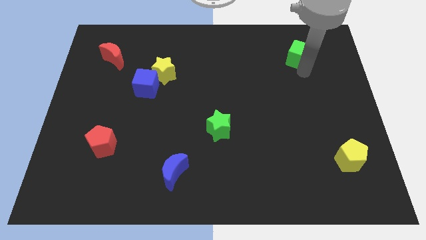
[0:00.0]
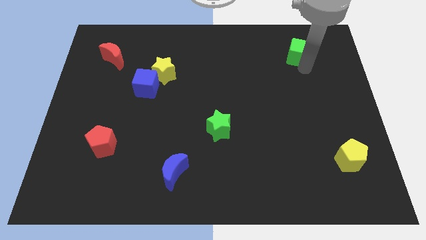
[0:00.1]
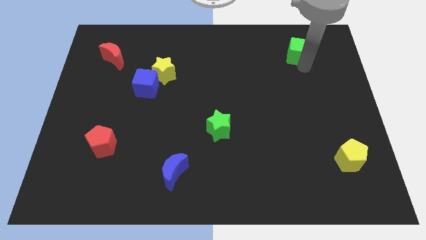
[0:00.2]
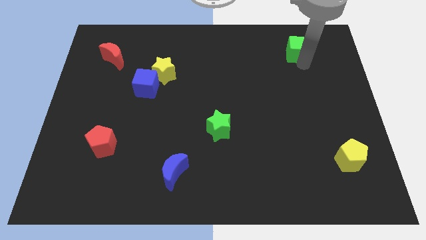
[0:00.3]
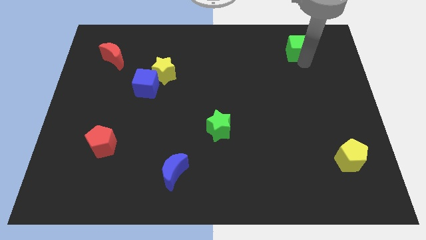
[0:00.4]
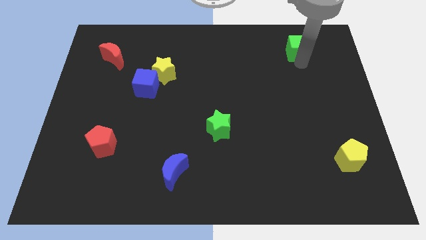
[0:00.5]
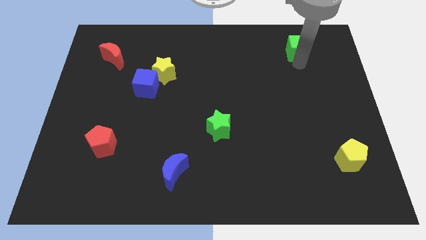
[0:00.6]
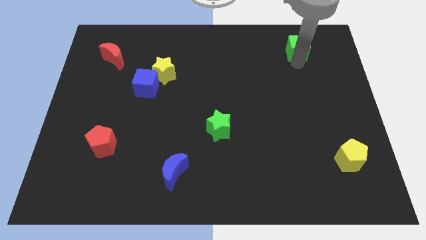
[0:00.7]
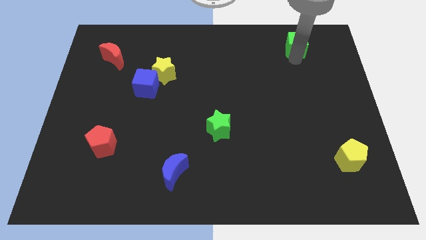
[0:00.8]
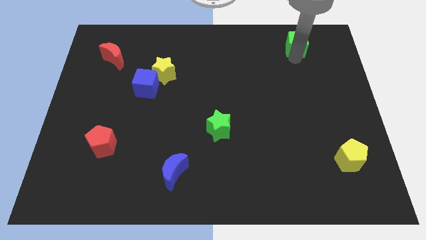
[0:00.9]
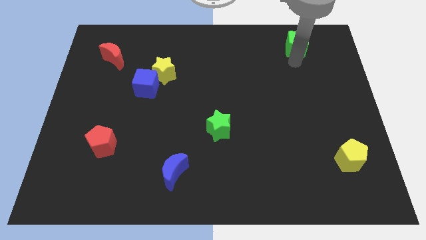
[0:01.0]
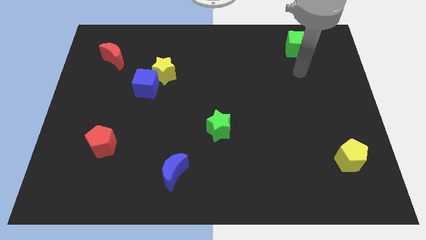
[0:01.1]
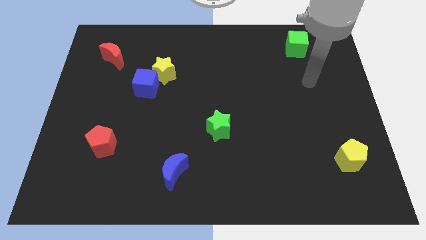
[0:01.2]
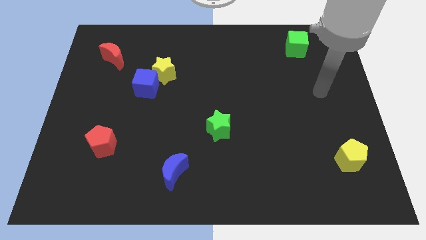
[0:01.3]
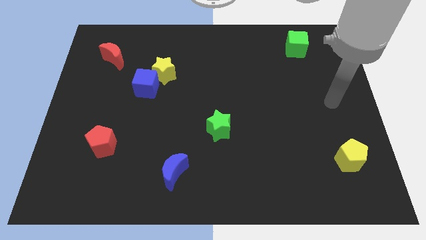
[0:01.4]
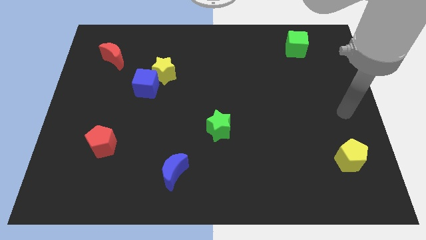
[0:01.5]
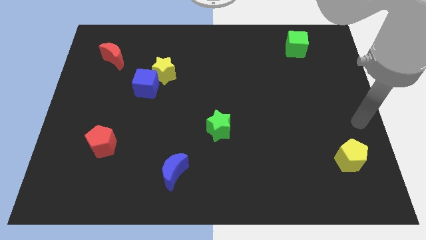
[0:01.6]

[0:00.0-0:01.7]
slightly push the blue cube to the top side

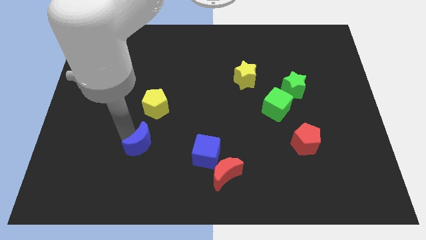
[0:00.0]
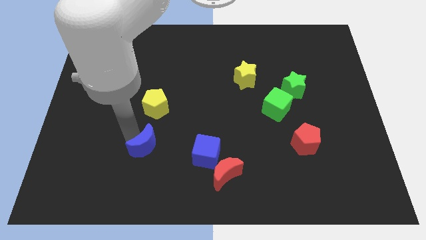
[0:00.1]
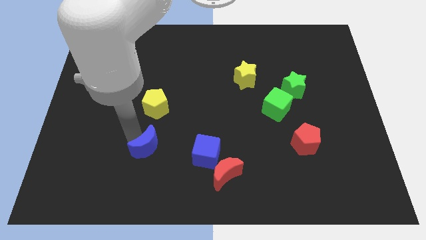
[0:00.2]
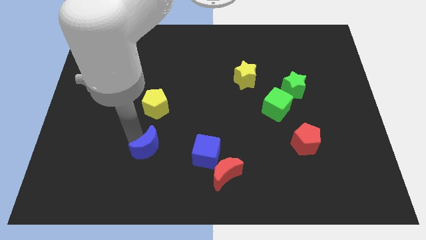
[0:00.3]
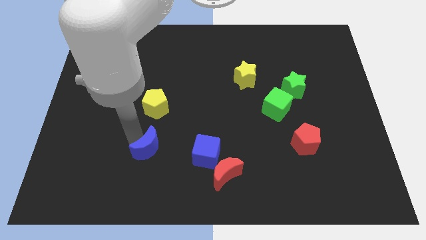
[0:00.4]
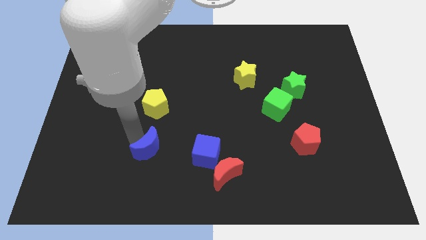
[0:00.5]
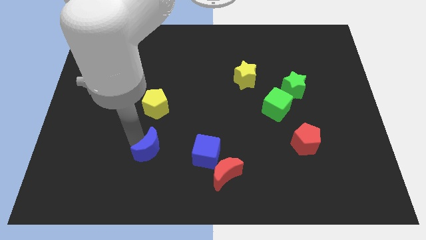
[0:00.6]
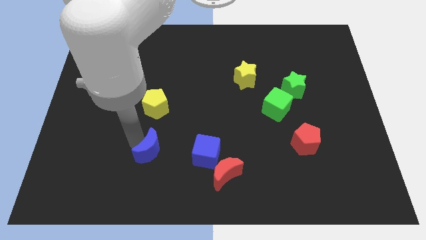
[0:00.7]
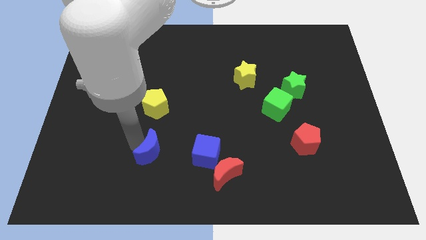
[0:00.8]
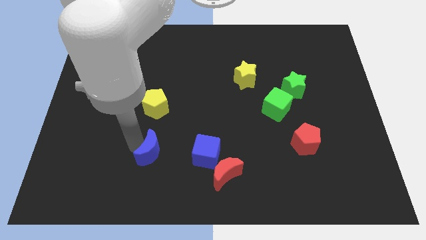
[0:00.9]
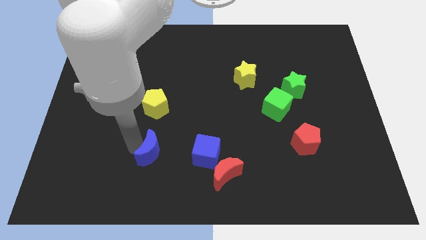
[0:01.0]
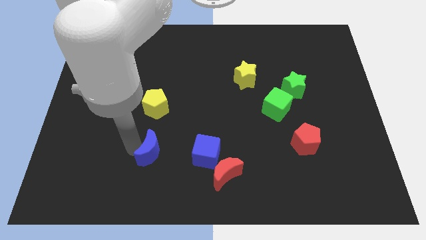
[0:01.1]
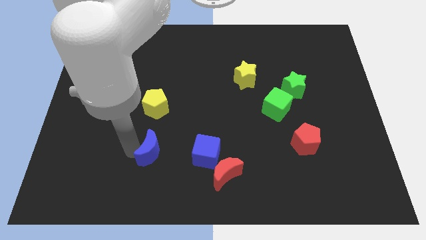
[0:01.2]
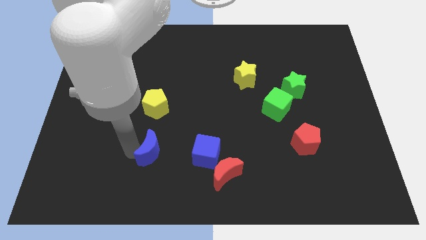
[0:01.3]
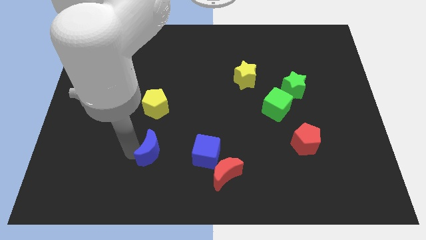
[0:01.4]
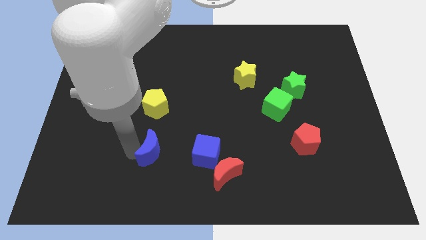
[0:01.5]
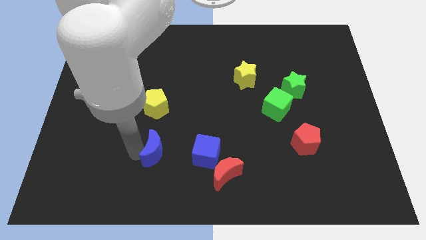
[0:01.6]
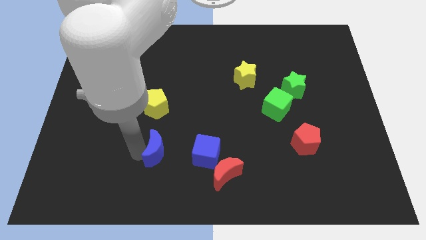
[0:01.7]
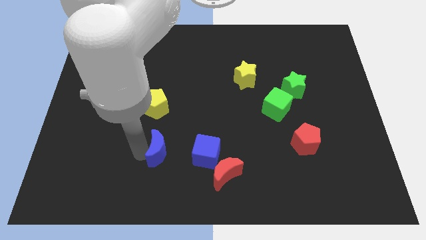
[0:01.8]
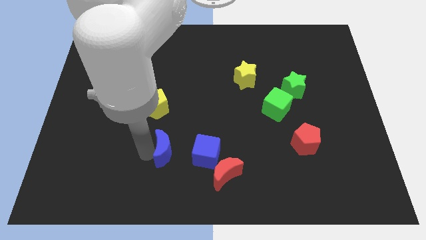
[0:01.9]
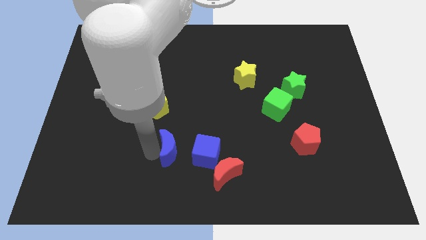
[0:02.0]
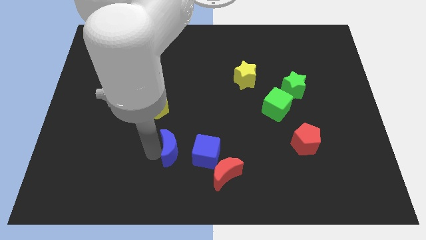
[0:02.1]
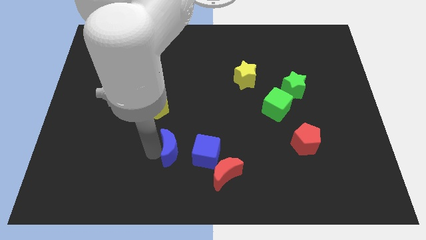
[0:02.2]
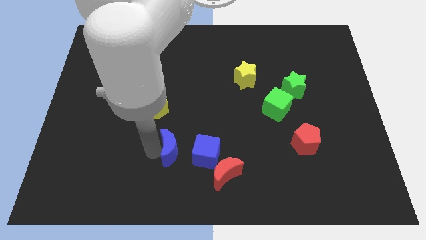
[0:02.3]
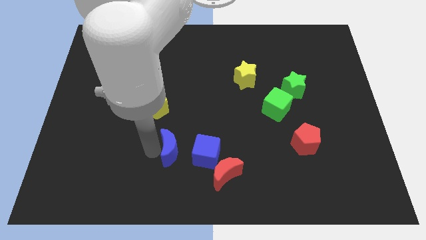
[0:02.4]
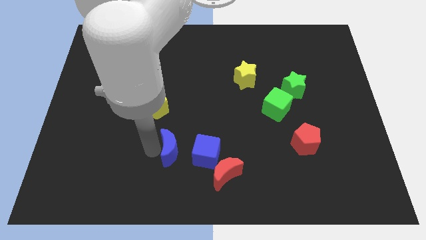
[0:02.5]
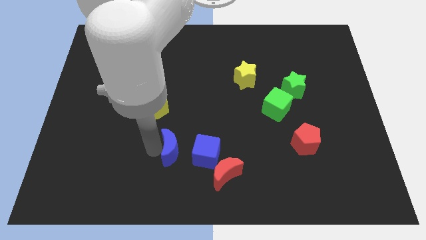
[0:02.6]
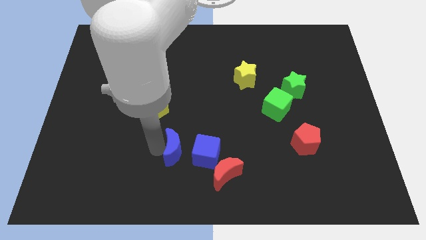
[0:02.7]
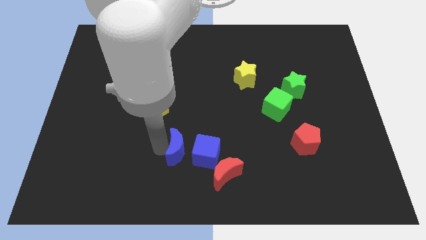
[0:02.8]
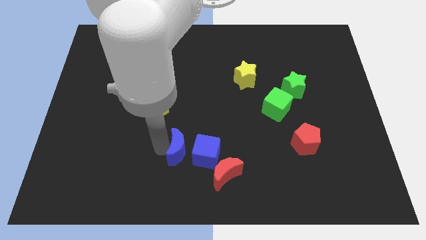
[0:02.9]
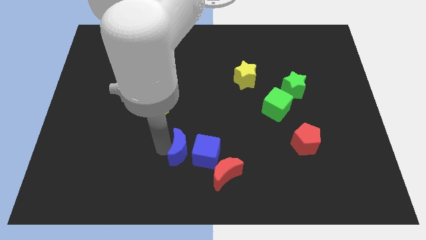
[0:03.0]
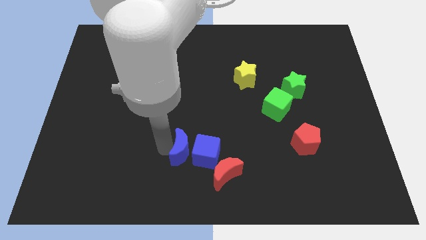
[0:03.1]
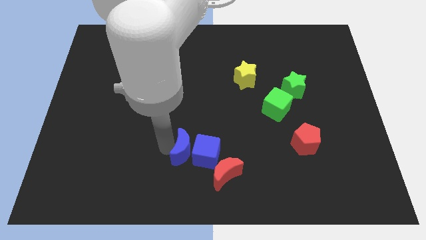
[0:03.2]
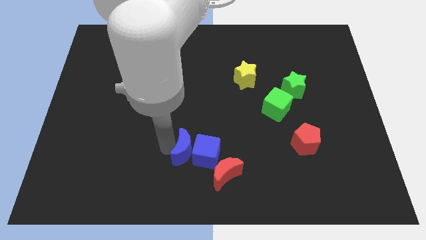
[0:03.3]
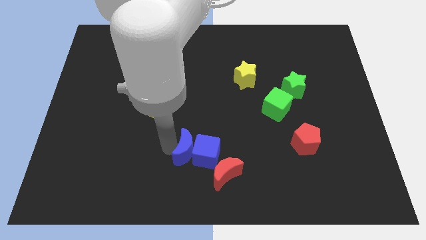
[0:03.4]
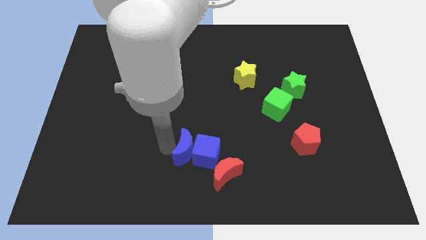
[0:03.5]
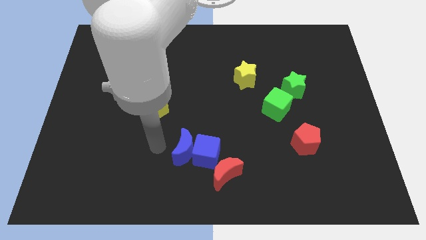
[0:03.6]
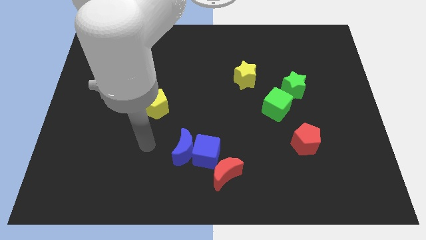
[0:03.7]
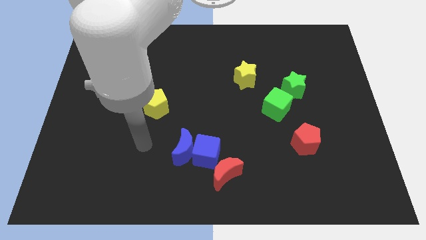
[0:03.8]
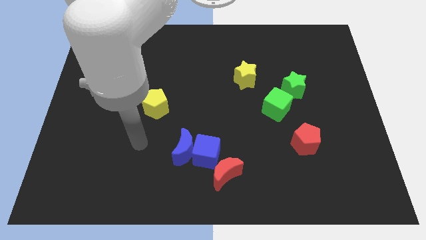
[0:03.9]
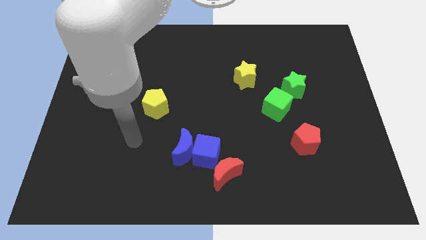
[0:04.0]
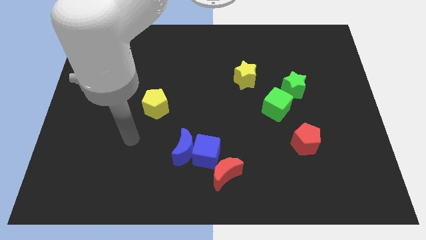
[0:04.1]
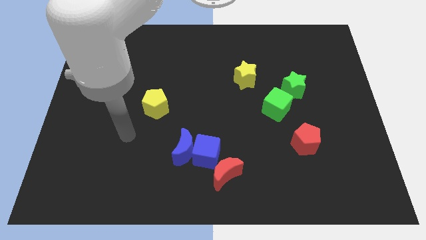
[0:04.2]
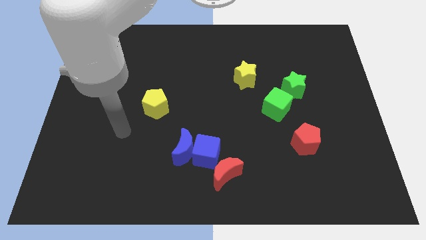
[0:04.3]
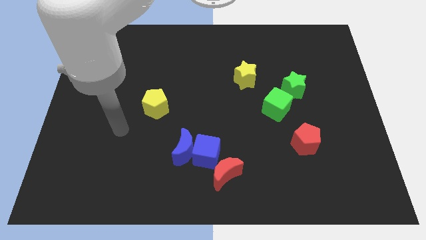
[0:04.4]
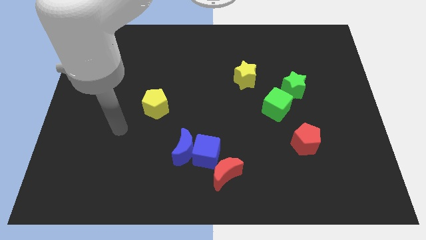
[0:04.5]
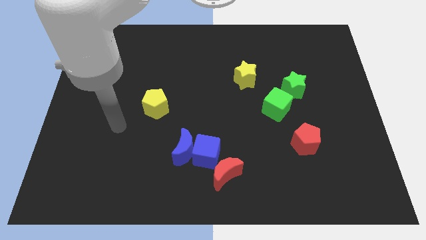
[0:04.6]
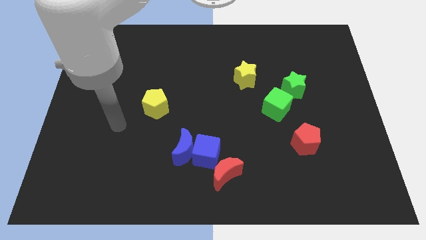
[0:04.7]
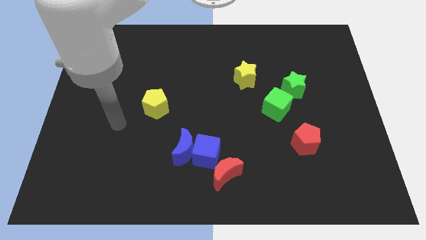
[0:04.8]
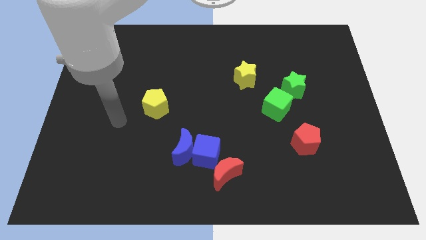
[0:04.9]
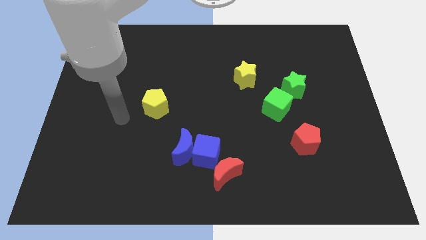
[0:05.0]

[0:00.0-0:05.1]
push blue moon into blue cube

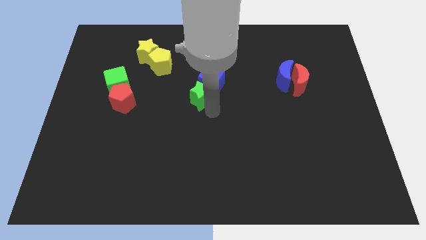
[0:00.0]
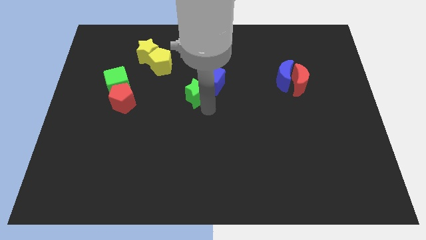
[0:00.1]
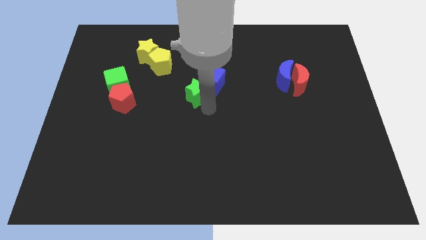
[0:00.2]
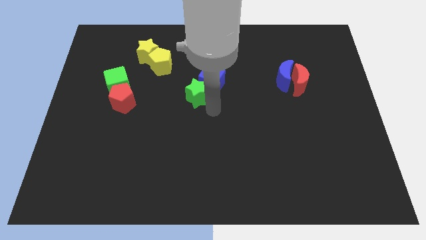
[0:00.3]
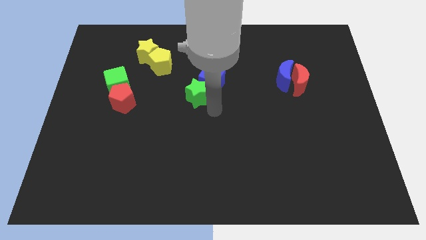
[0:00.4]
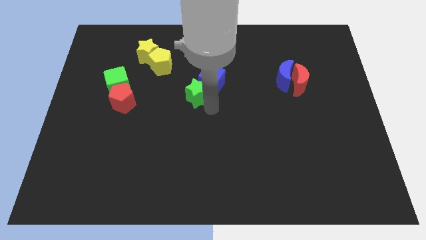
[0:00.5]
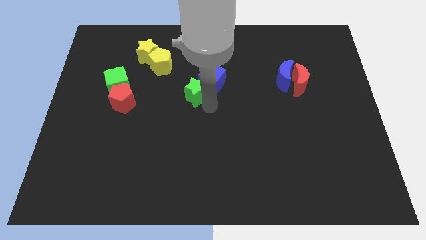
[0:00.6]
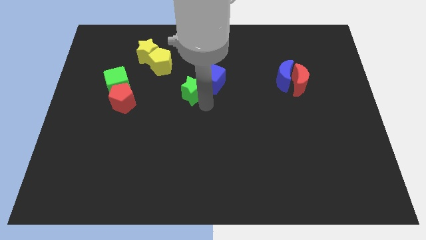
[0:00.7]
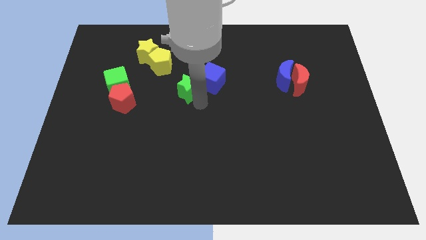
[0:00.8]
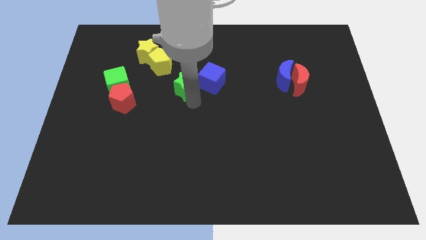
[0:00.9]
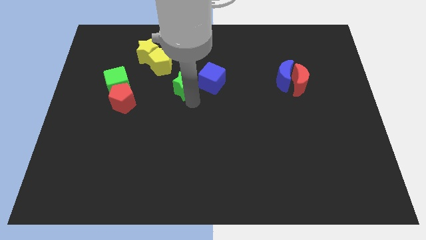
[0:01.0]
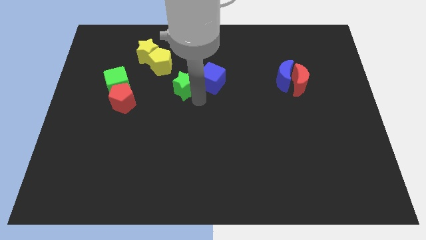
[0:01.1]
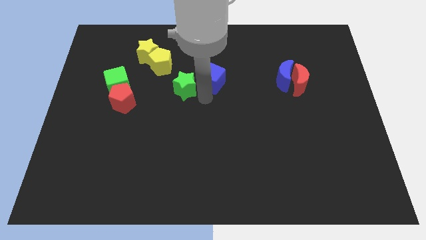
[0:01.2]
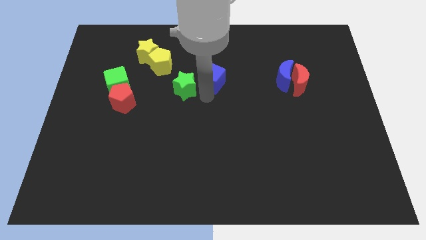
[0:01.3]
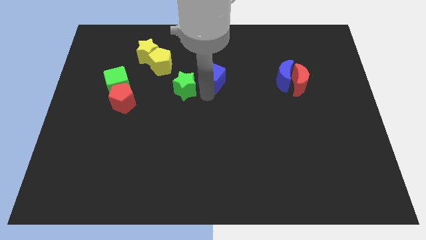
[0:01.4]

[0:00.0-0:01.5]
move the green star diagonal top right to the red pentagon

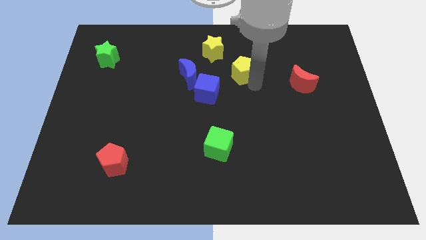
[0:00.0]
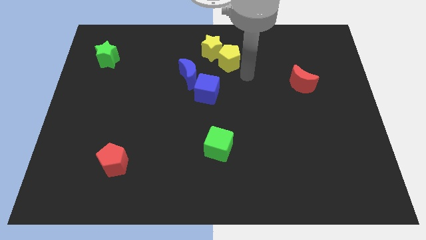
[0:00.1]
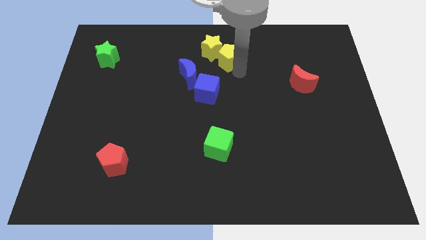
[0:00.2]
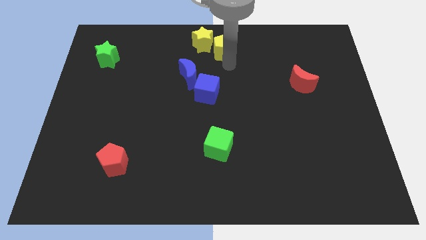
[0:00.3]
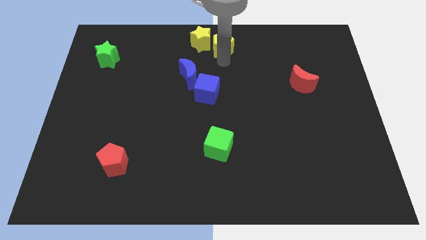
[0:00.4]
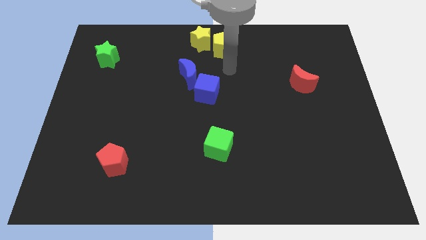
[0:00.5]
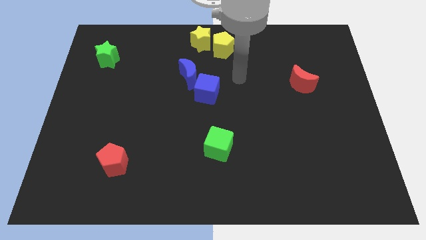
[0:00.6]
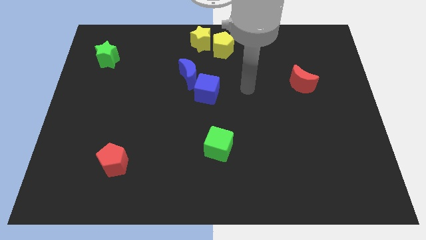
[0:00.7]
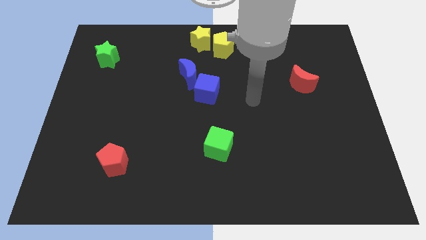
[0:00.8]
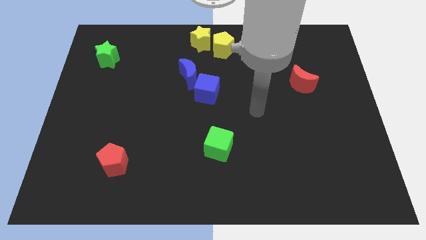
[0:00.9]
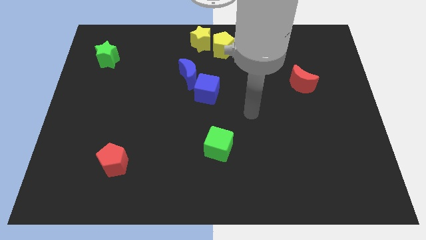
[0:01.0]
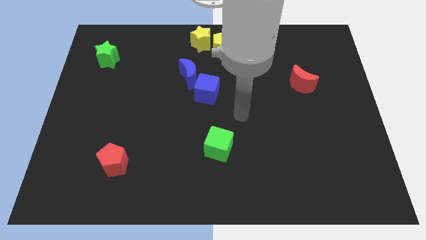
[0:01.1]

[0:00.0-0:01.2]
push the yellow pentagon and yellow star slightly upwards
